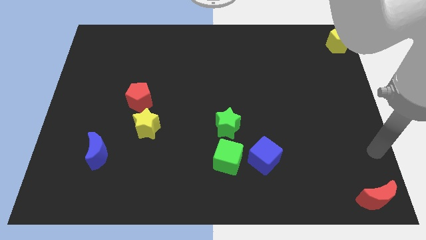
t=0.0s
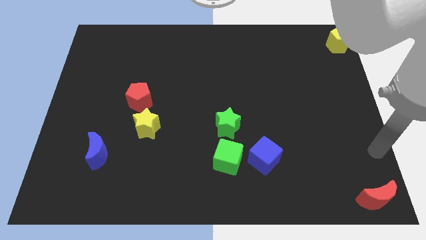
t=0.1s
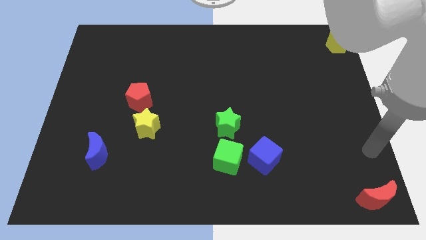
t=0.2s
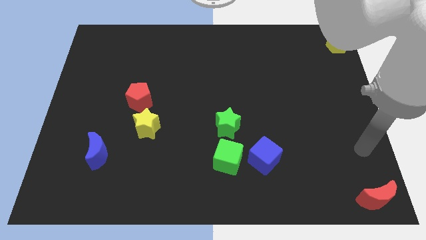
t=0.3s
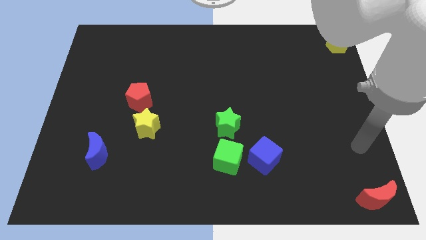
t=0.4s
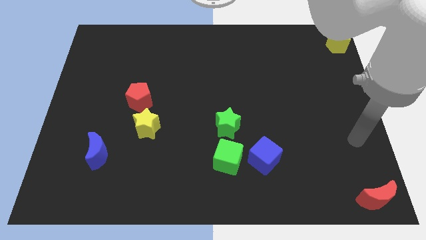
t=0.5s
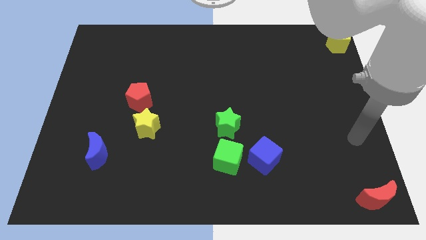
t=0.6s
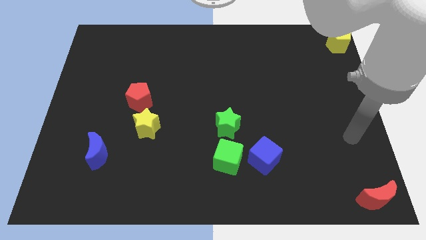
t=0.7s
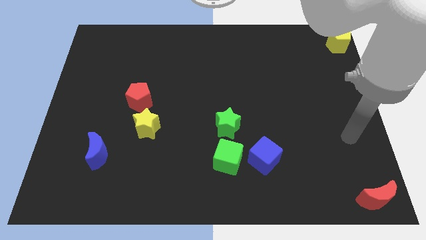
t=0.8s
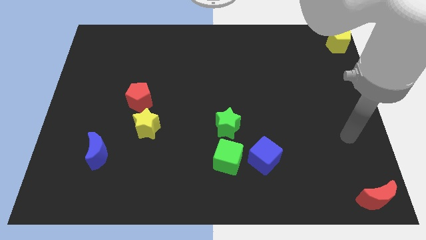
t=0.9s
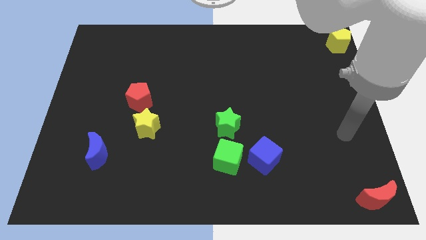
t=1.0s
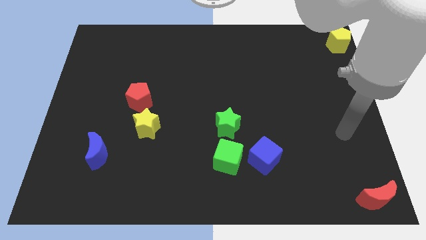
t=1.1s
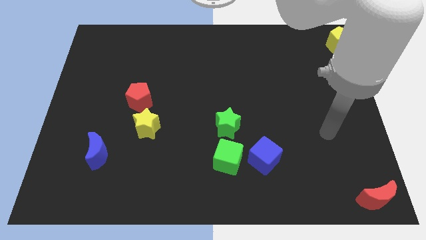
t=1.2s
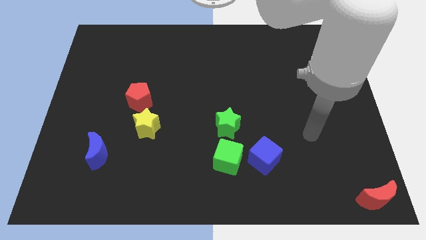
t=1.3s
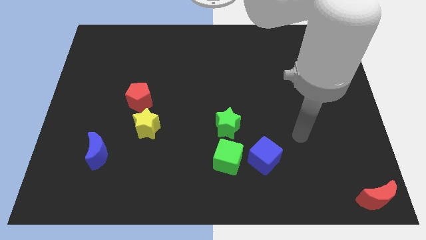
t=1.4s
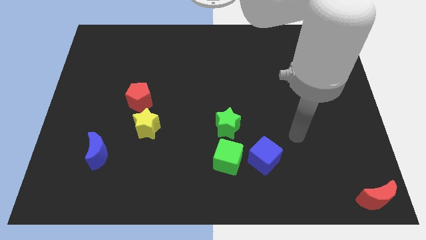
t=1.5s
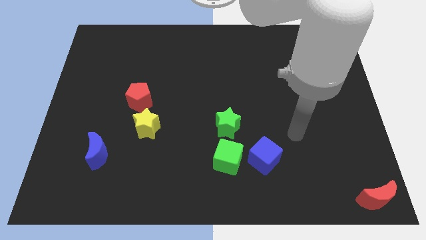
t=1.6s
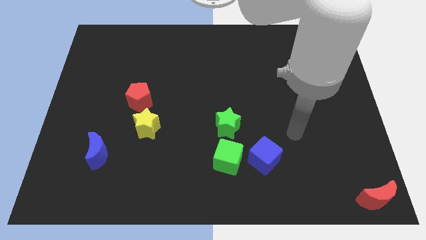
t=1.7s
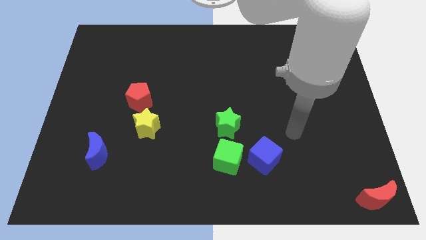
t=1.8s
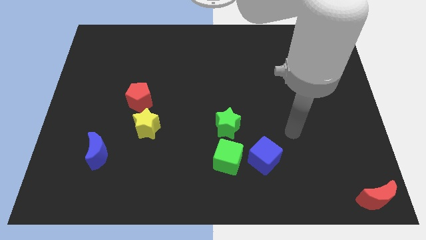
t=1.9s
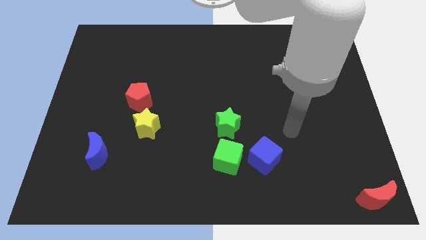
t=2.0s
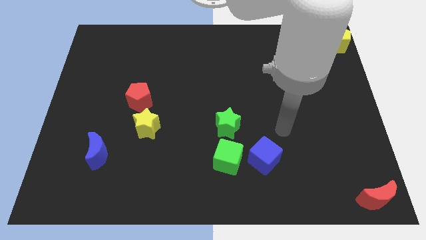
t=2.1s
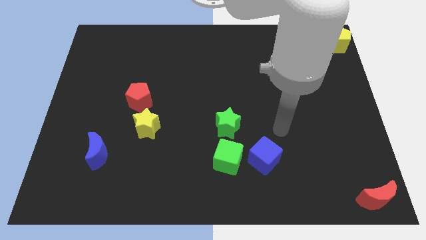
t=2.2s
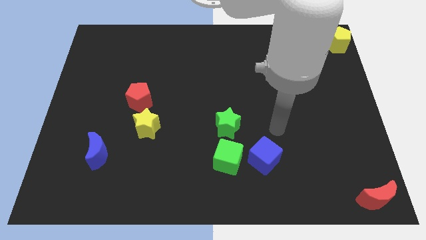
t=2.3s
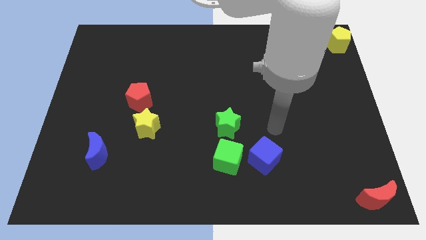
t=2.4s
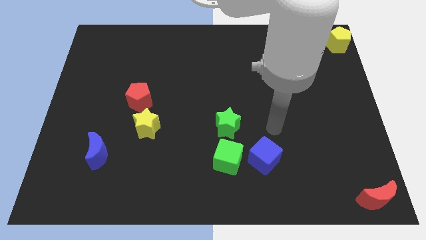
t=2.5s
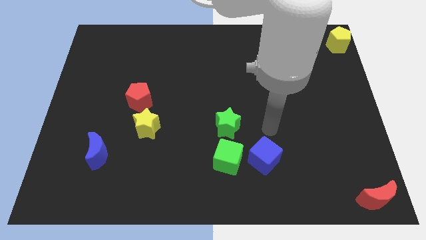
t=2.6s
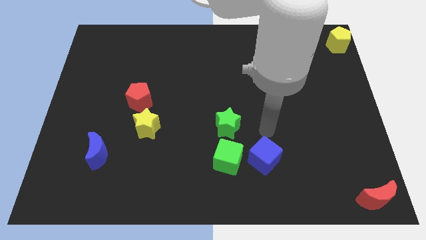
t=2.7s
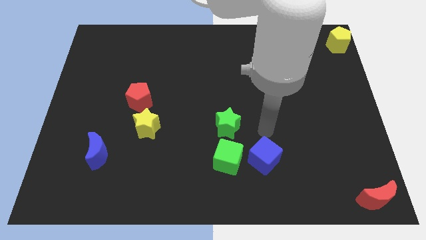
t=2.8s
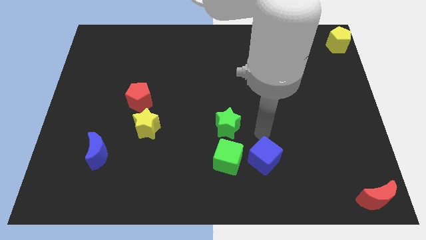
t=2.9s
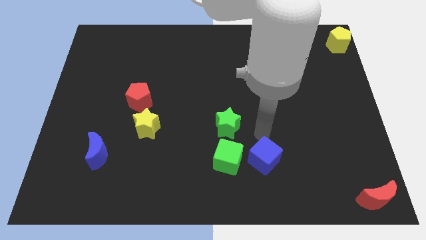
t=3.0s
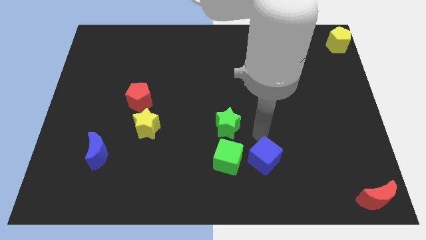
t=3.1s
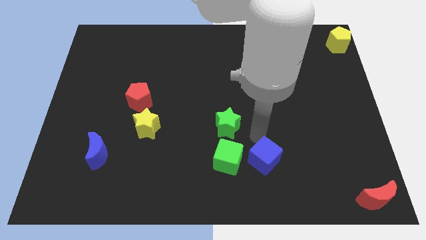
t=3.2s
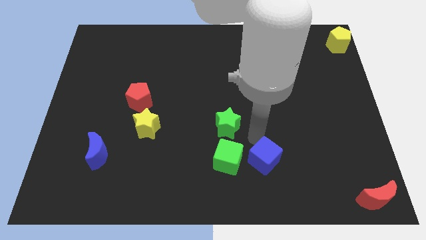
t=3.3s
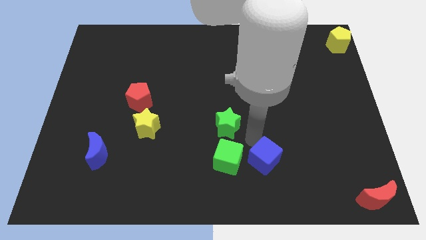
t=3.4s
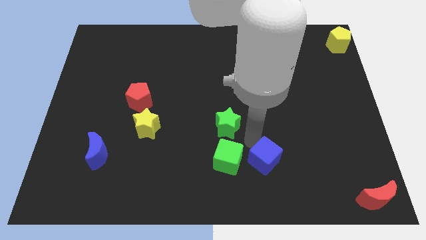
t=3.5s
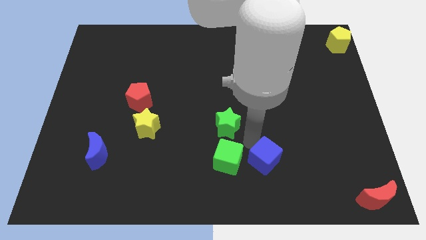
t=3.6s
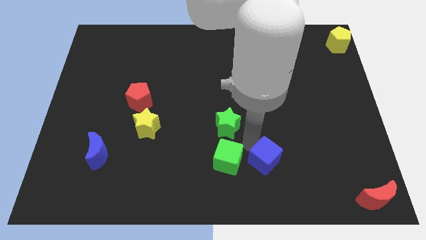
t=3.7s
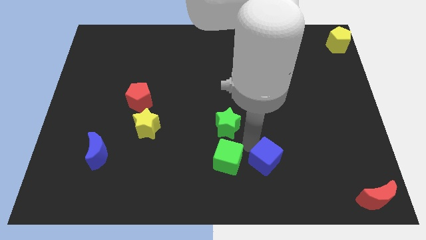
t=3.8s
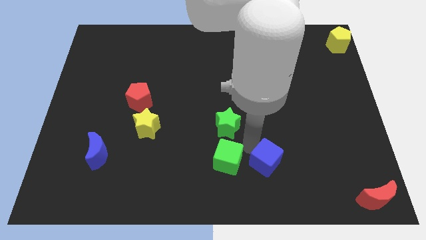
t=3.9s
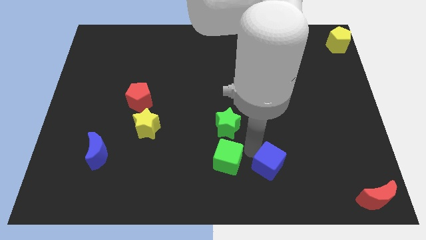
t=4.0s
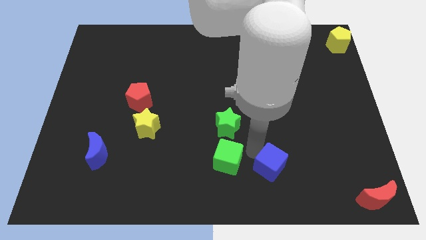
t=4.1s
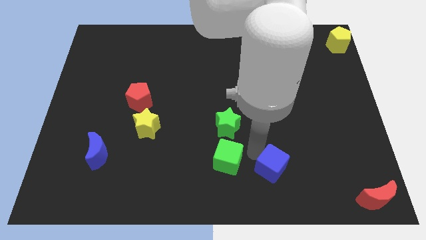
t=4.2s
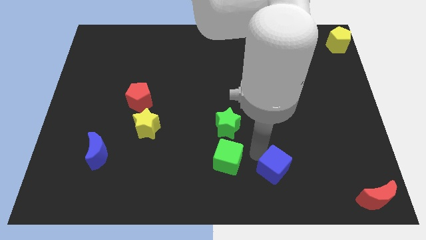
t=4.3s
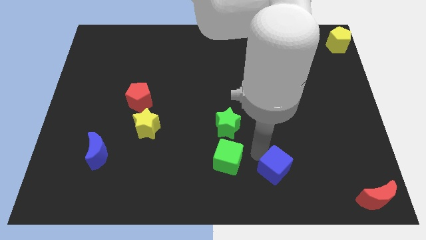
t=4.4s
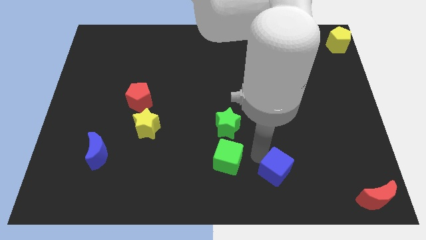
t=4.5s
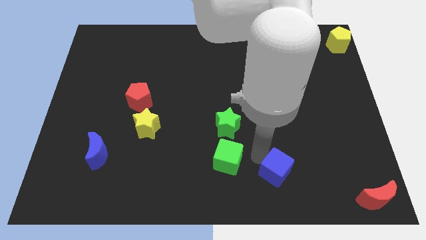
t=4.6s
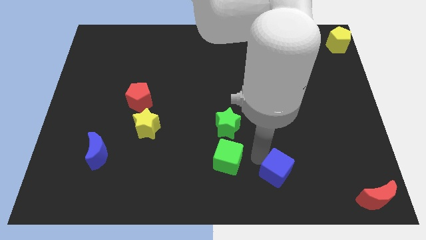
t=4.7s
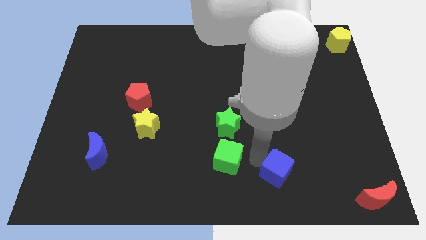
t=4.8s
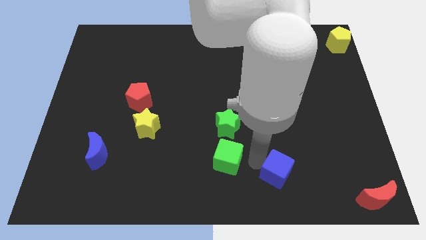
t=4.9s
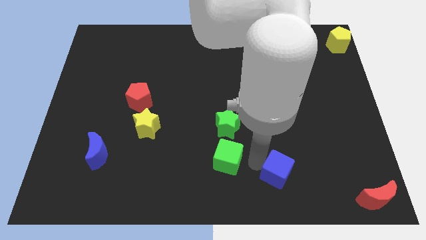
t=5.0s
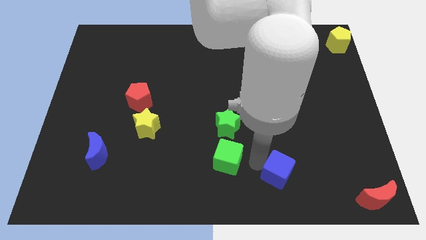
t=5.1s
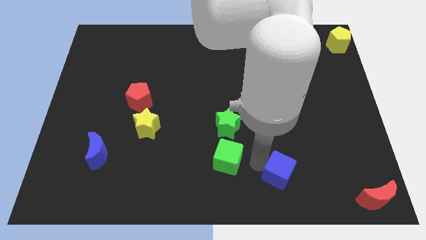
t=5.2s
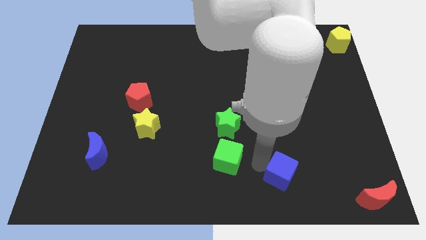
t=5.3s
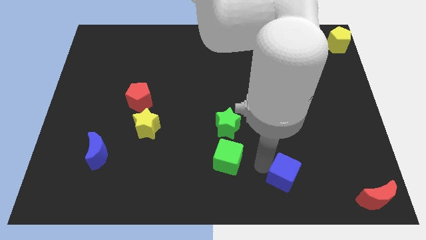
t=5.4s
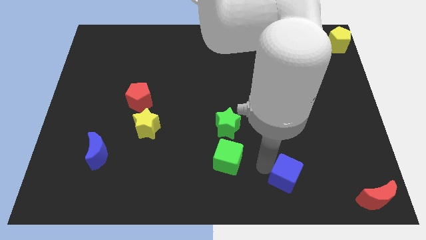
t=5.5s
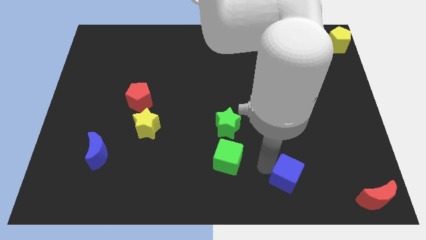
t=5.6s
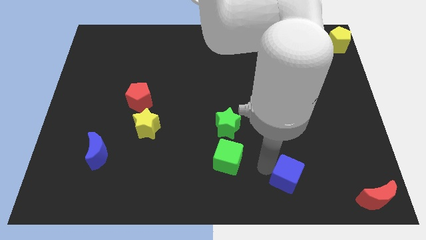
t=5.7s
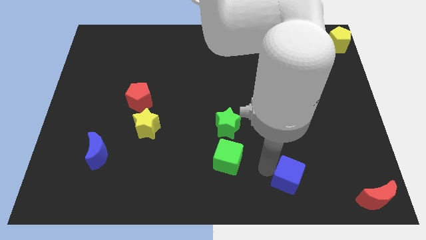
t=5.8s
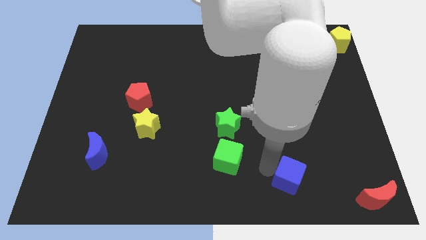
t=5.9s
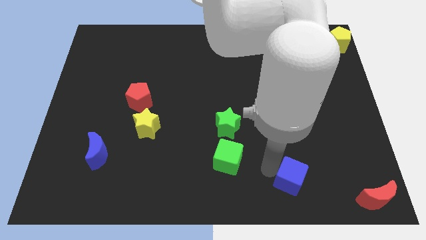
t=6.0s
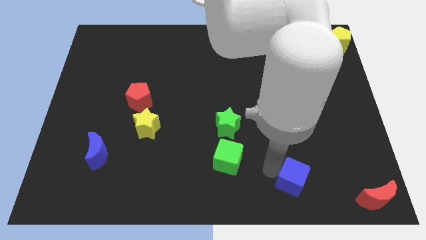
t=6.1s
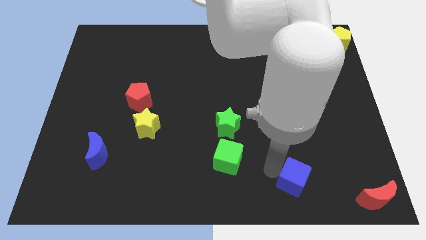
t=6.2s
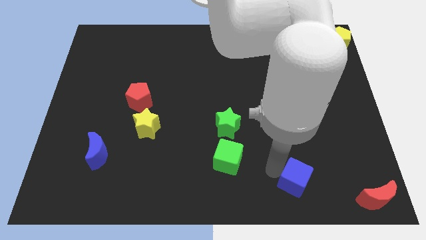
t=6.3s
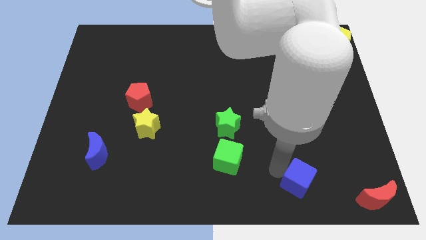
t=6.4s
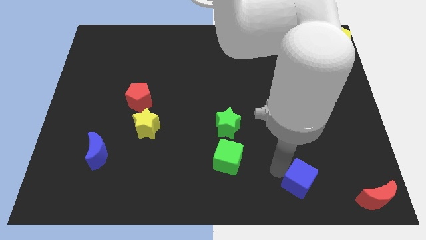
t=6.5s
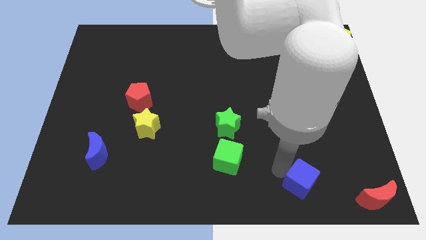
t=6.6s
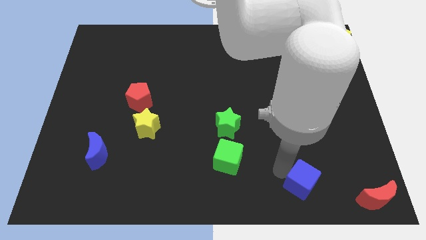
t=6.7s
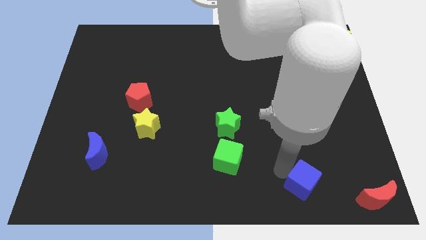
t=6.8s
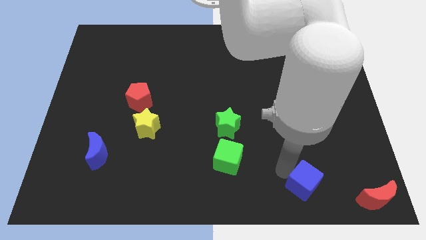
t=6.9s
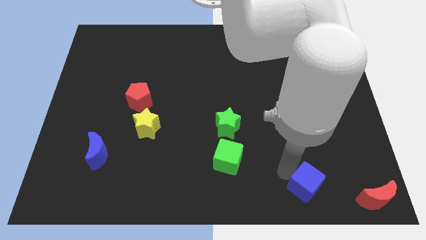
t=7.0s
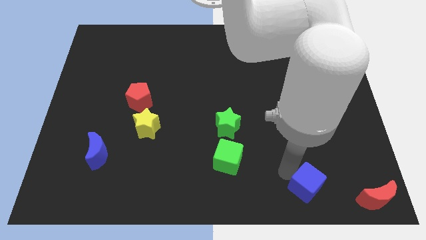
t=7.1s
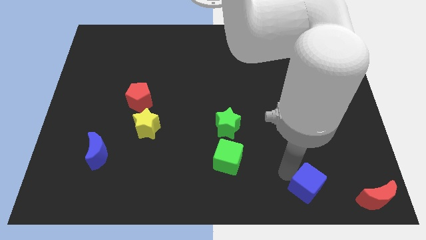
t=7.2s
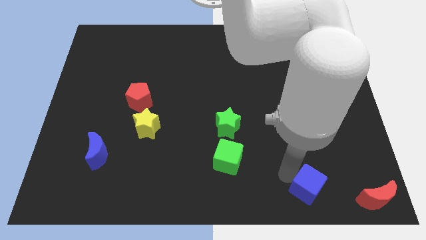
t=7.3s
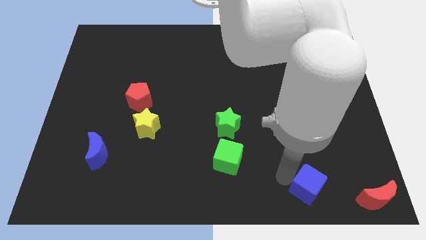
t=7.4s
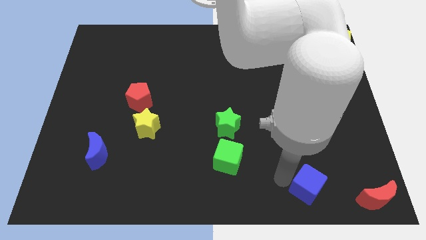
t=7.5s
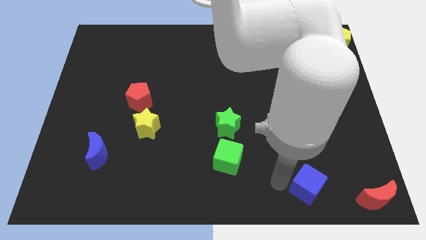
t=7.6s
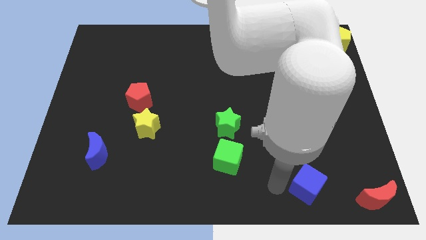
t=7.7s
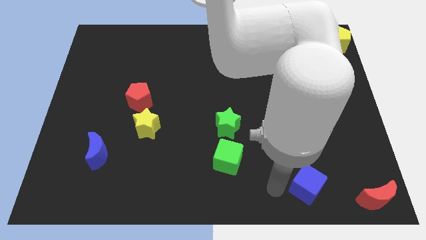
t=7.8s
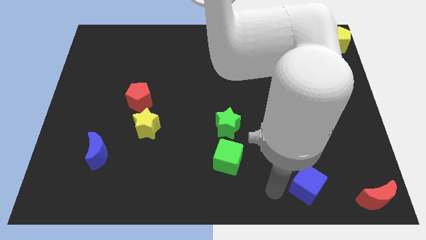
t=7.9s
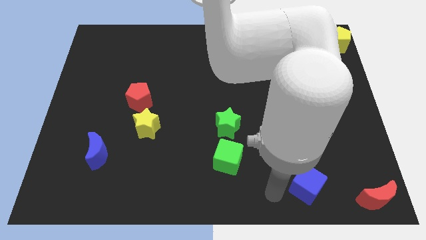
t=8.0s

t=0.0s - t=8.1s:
move the blue cube to the left of the red crescent

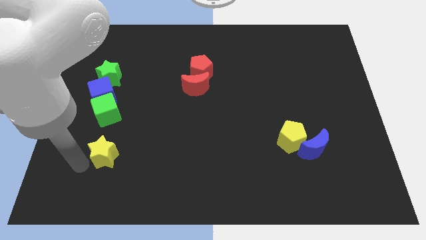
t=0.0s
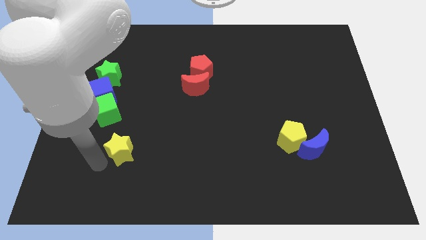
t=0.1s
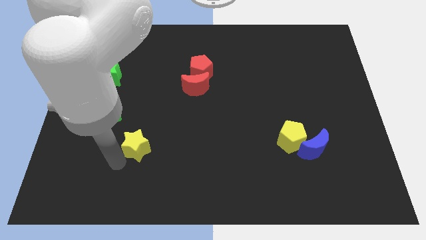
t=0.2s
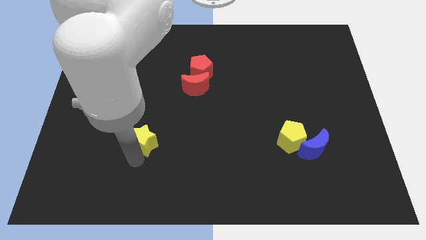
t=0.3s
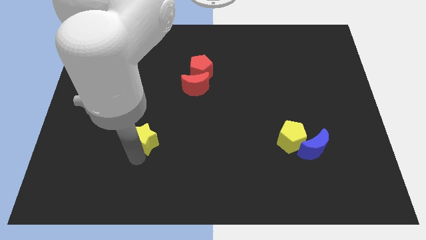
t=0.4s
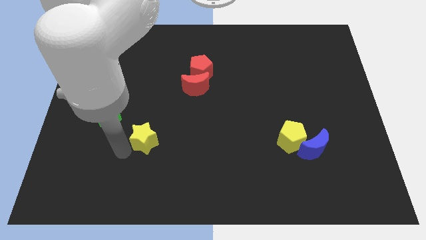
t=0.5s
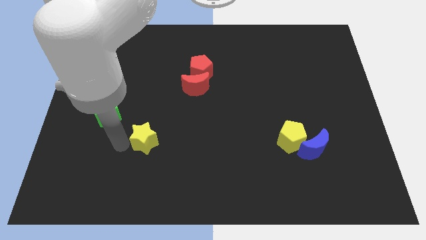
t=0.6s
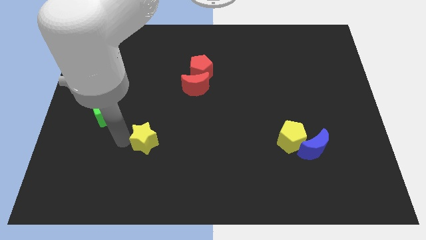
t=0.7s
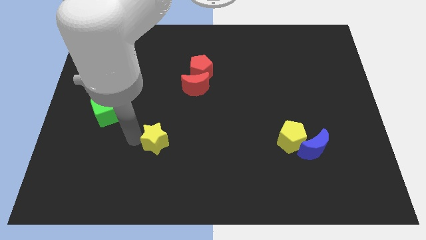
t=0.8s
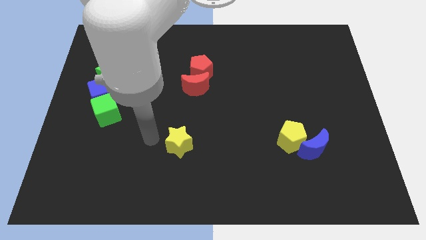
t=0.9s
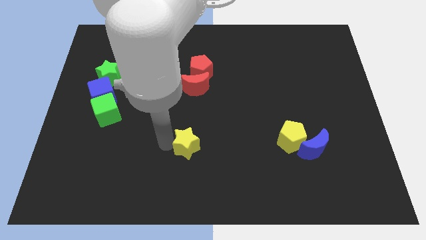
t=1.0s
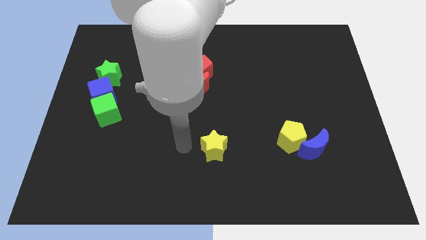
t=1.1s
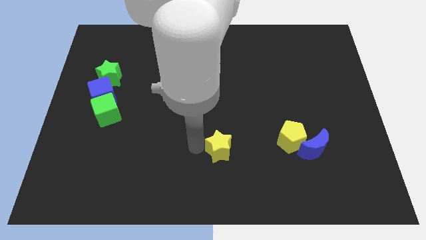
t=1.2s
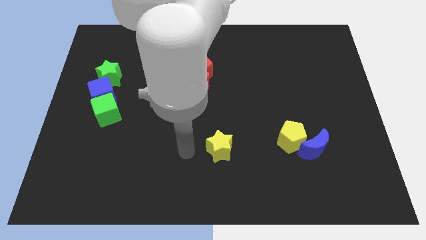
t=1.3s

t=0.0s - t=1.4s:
push the yellow star horizontally to the left side of the yellow pentagon
